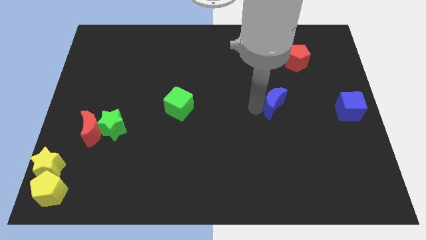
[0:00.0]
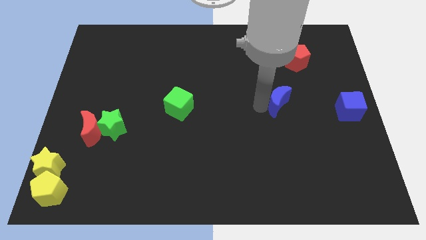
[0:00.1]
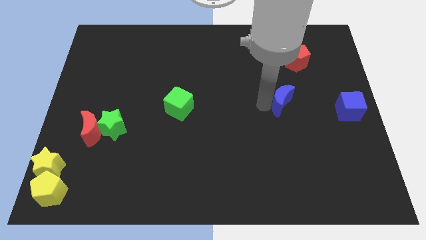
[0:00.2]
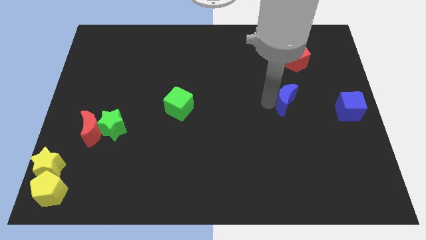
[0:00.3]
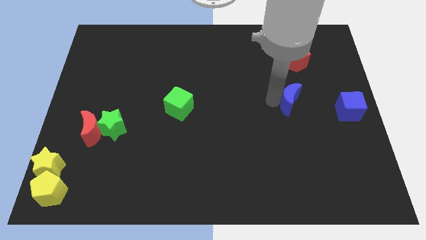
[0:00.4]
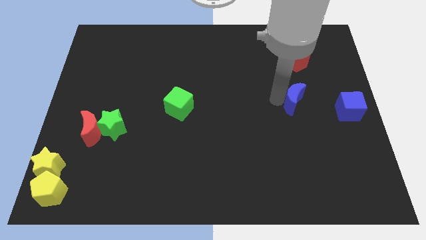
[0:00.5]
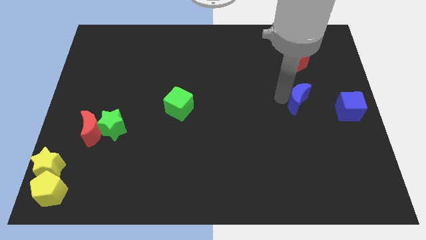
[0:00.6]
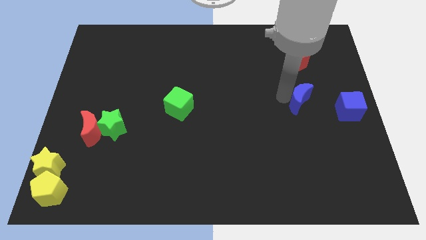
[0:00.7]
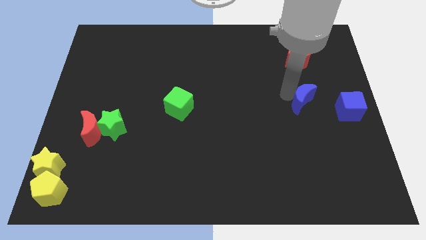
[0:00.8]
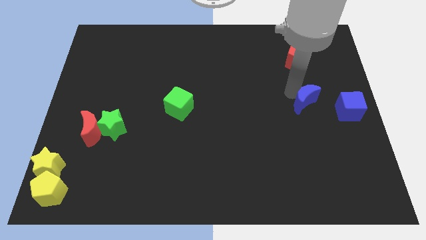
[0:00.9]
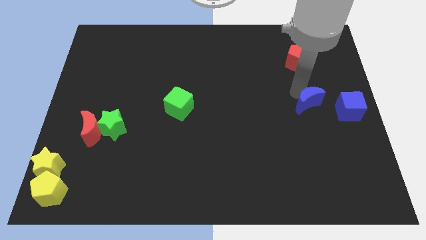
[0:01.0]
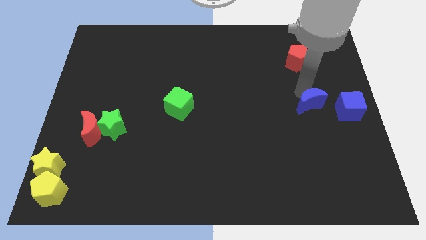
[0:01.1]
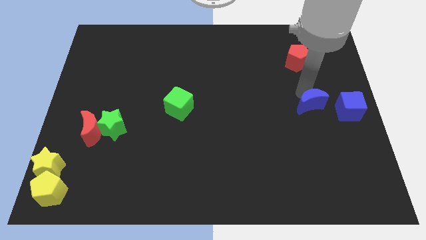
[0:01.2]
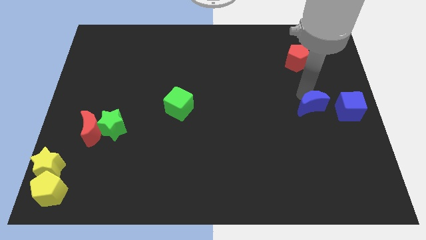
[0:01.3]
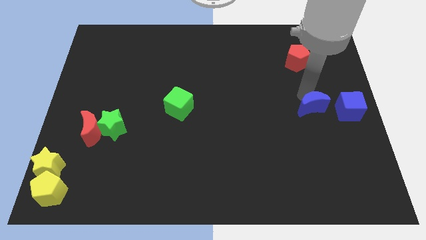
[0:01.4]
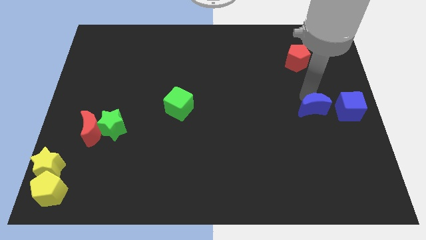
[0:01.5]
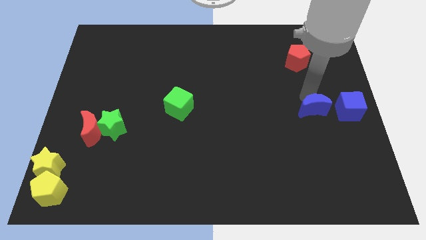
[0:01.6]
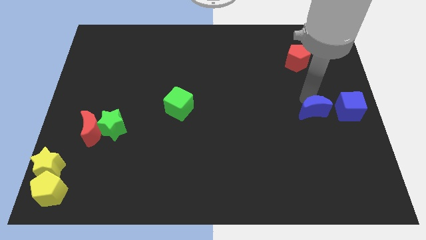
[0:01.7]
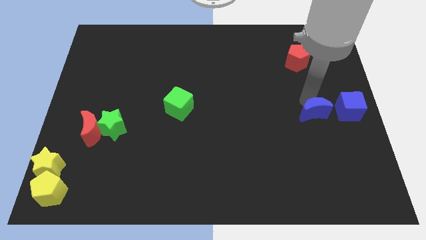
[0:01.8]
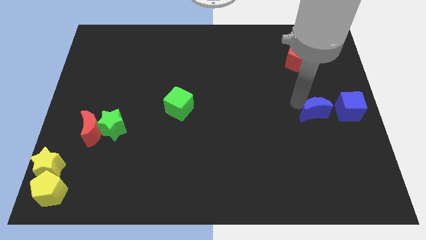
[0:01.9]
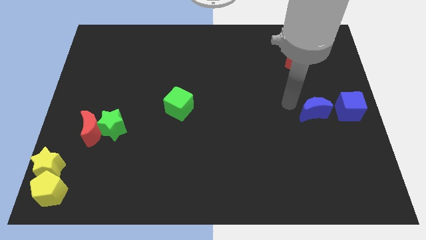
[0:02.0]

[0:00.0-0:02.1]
move the blue crescent left to the blue cube

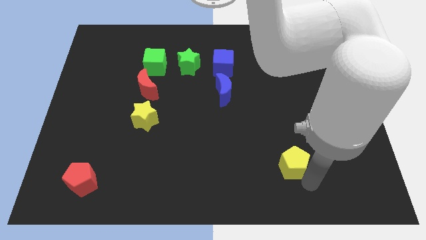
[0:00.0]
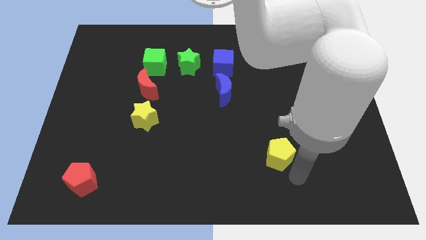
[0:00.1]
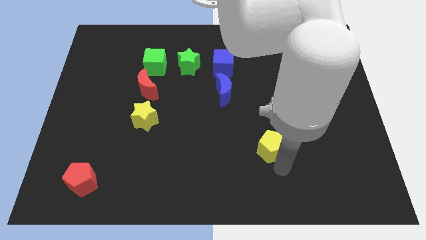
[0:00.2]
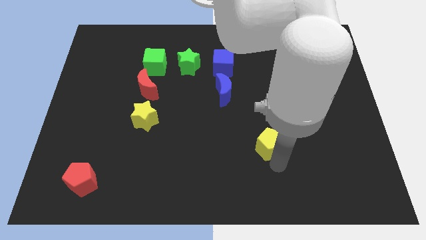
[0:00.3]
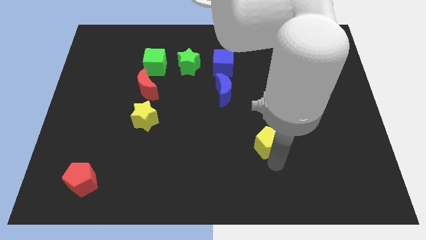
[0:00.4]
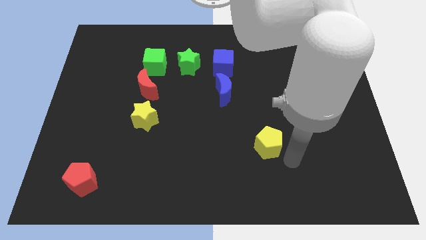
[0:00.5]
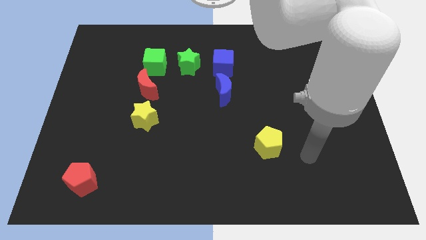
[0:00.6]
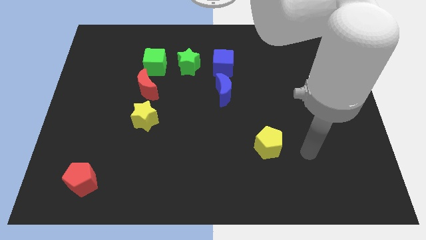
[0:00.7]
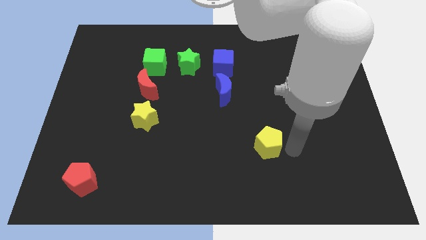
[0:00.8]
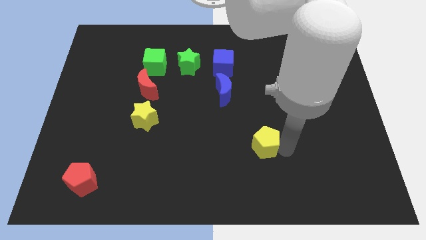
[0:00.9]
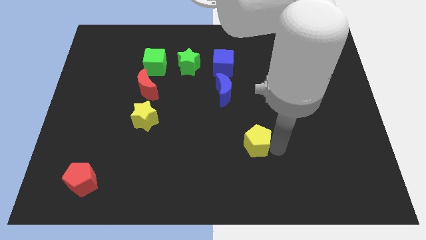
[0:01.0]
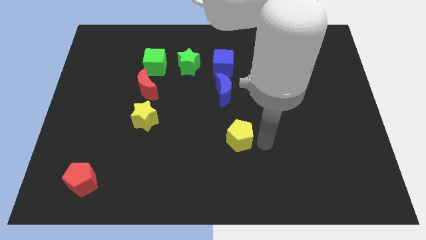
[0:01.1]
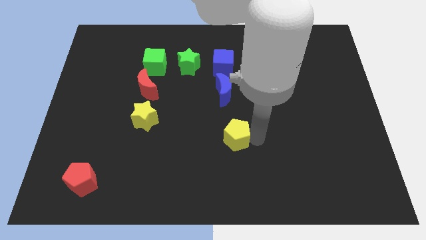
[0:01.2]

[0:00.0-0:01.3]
move the yellow pentagon slightly upwards of the board

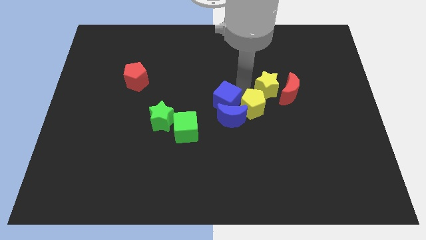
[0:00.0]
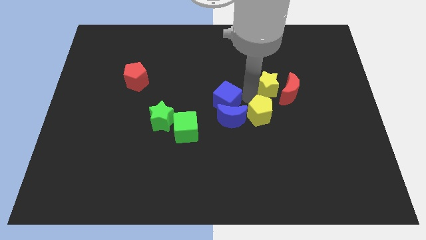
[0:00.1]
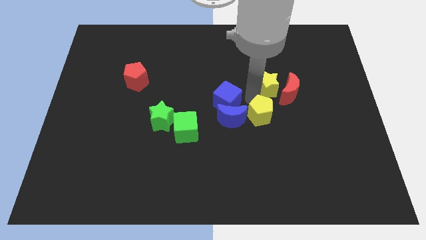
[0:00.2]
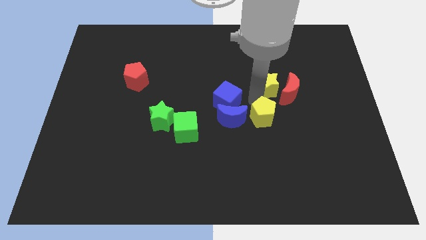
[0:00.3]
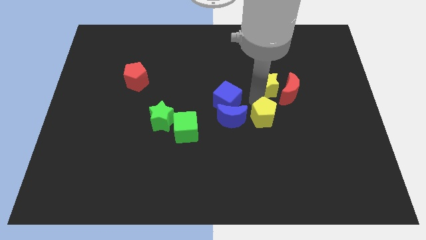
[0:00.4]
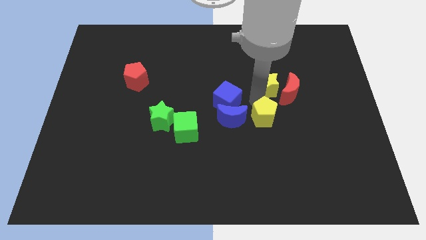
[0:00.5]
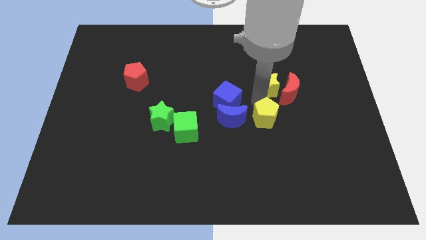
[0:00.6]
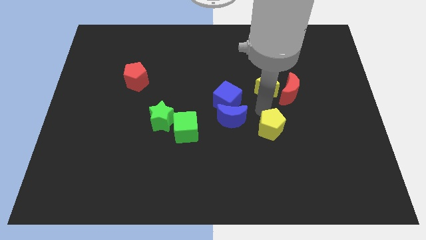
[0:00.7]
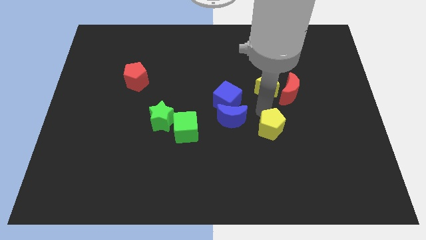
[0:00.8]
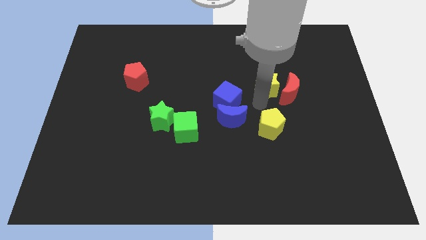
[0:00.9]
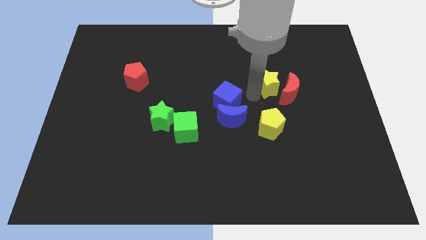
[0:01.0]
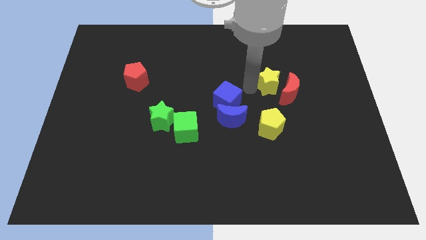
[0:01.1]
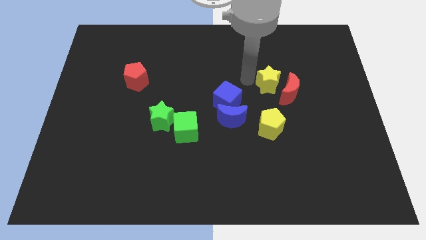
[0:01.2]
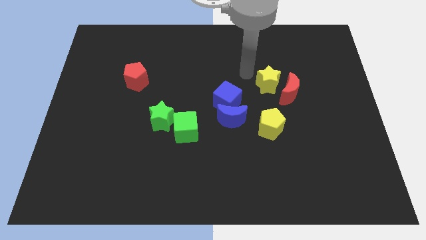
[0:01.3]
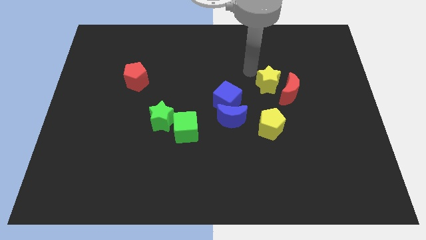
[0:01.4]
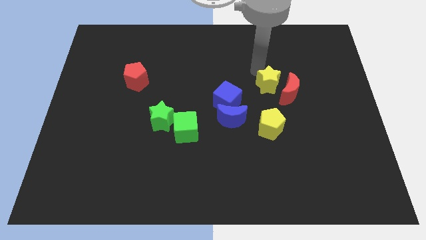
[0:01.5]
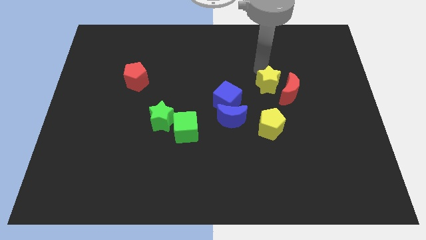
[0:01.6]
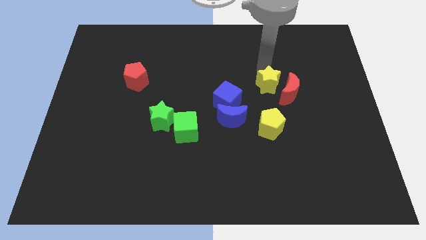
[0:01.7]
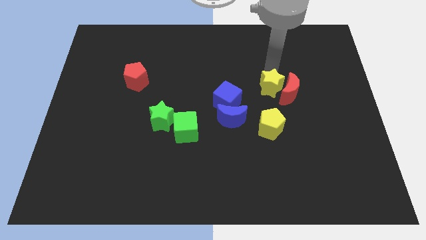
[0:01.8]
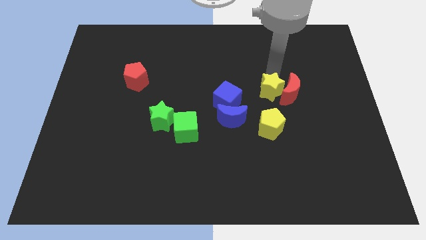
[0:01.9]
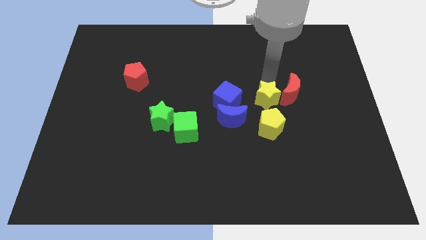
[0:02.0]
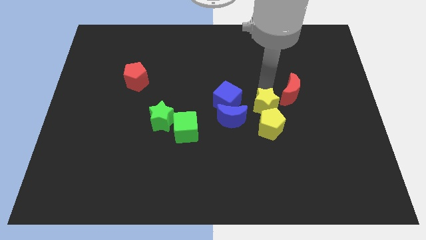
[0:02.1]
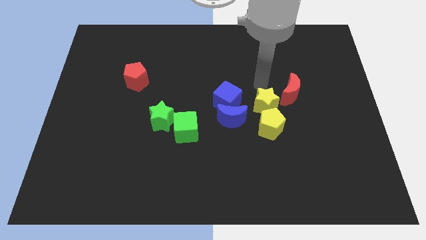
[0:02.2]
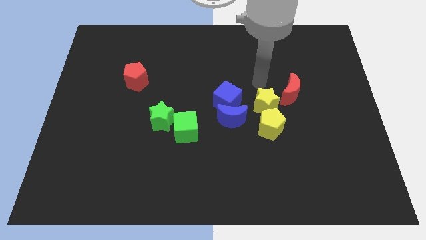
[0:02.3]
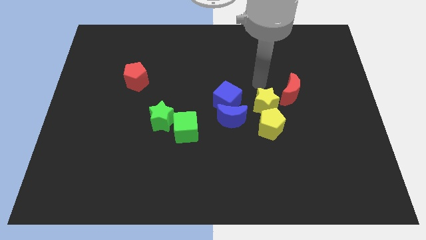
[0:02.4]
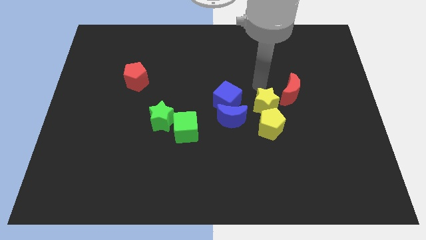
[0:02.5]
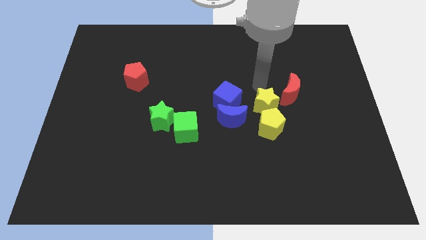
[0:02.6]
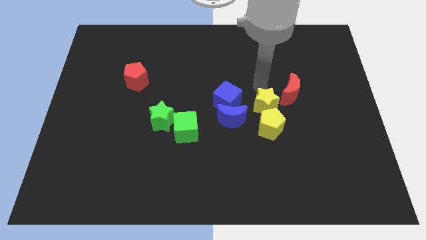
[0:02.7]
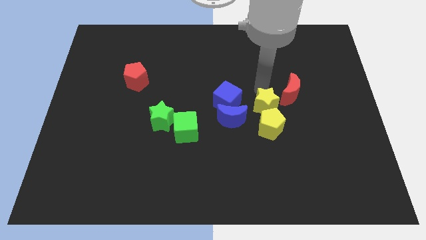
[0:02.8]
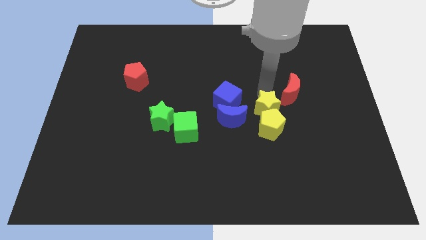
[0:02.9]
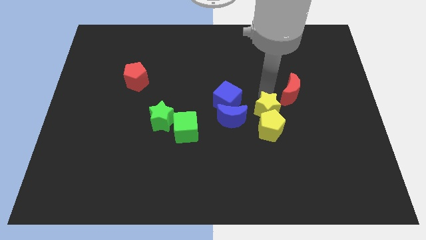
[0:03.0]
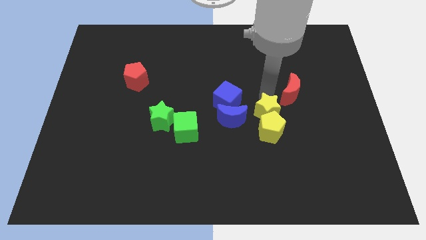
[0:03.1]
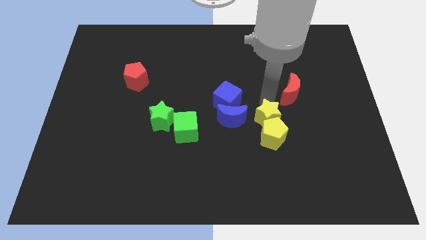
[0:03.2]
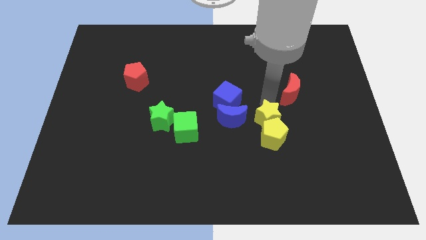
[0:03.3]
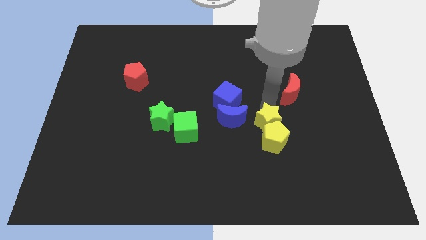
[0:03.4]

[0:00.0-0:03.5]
move both the yellow blocks slightly to the bottom side of the board

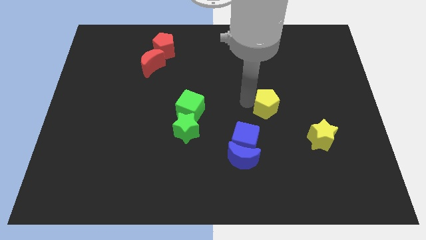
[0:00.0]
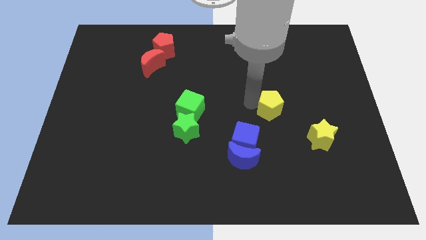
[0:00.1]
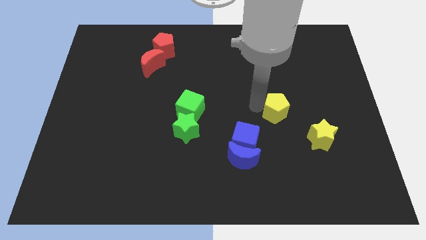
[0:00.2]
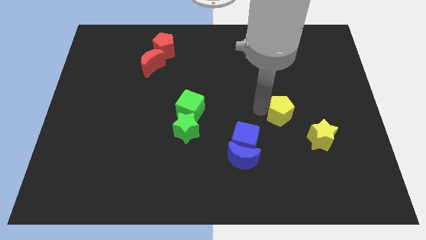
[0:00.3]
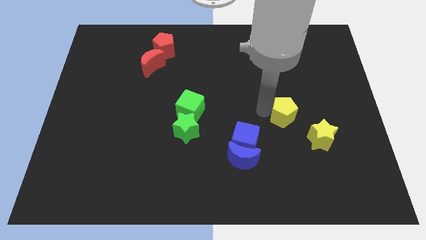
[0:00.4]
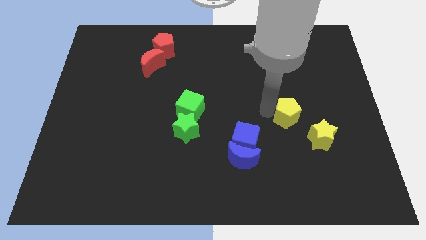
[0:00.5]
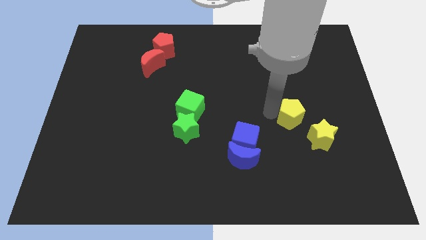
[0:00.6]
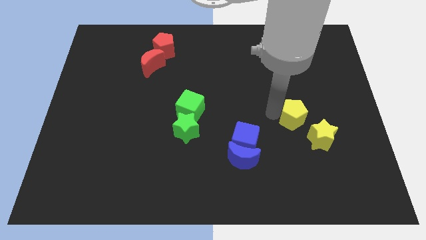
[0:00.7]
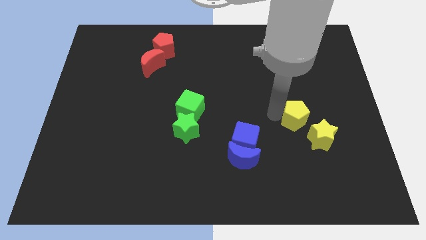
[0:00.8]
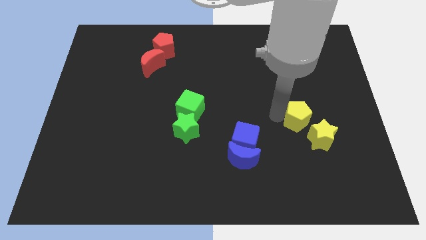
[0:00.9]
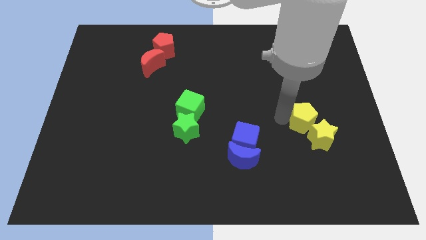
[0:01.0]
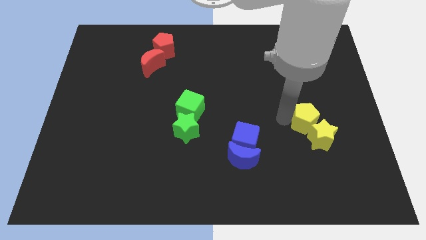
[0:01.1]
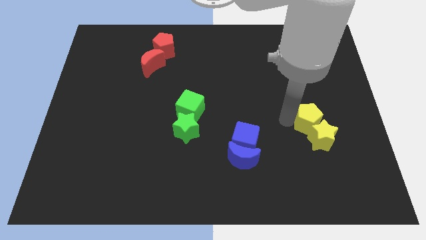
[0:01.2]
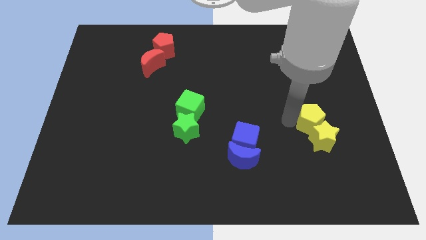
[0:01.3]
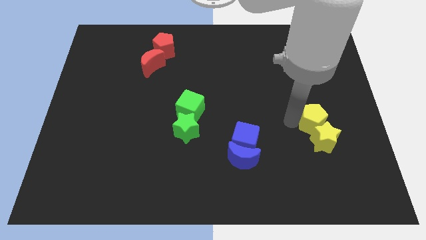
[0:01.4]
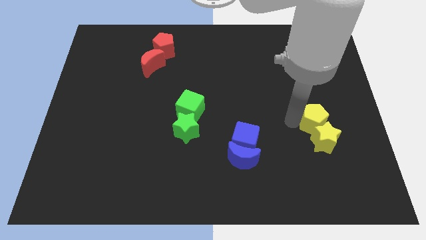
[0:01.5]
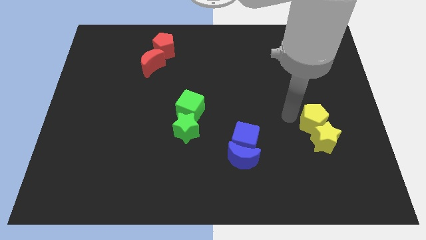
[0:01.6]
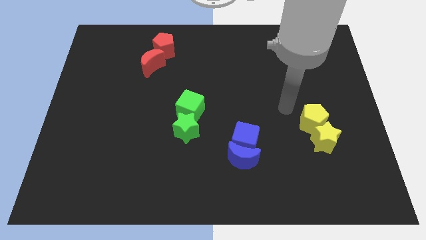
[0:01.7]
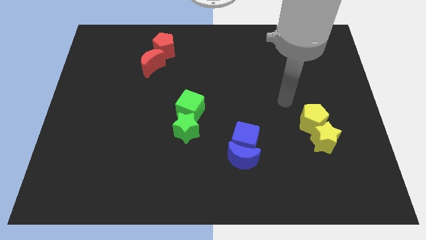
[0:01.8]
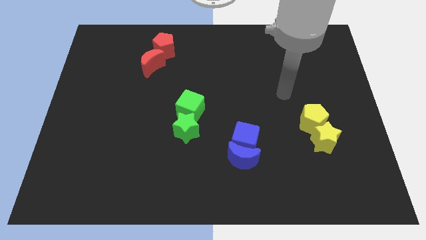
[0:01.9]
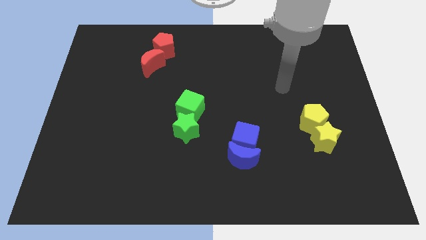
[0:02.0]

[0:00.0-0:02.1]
push the yellow pentagon towards the yellow star
